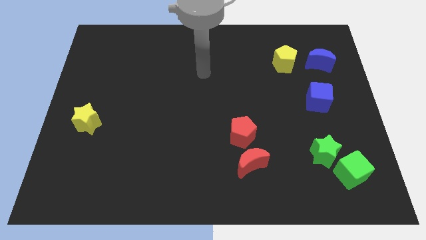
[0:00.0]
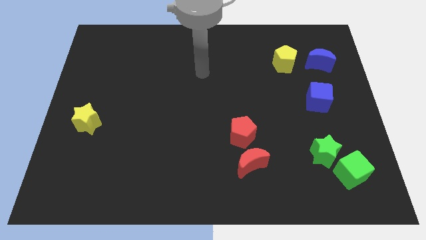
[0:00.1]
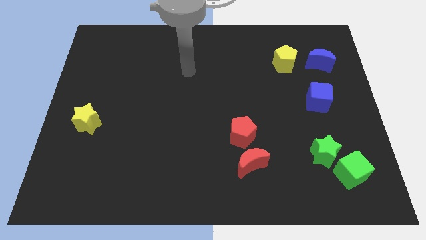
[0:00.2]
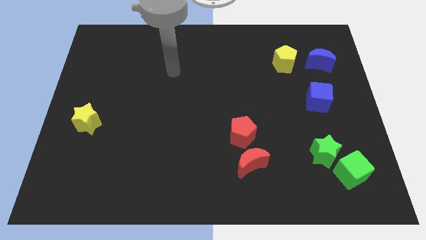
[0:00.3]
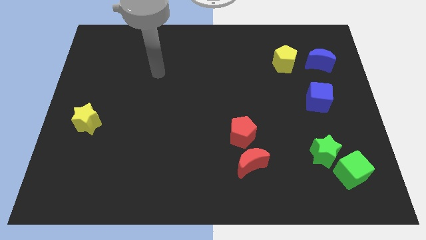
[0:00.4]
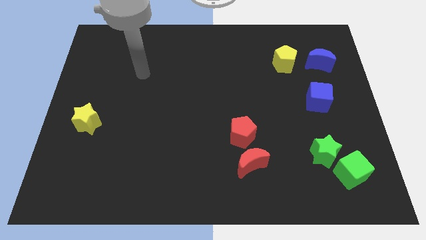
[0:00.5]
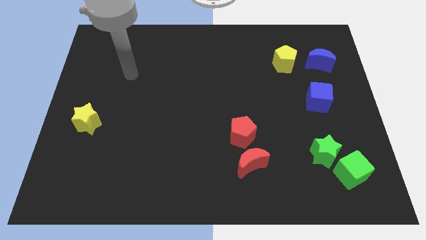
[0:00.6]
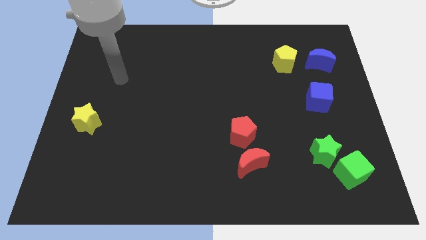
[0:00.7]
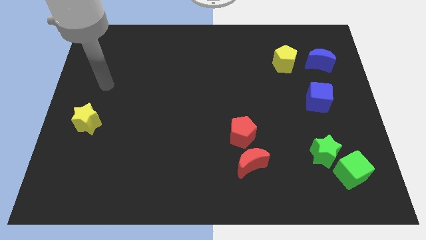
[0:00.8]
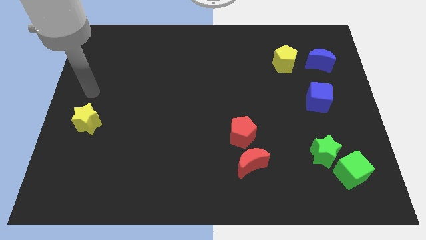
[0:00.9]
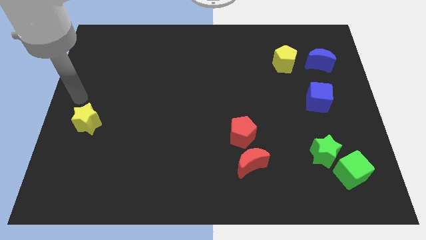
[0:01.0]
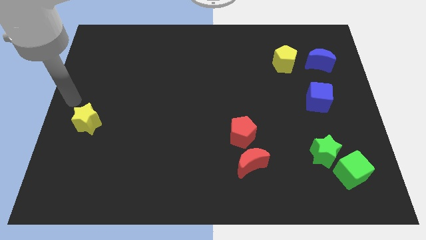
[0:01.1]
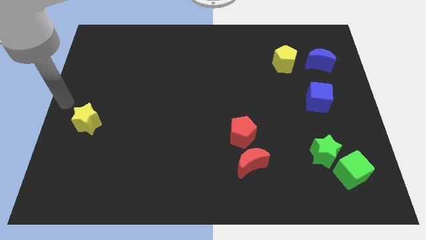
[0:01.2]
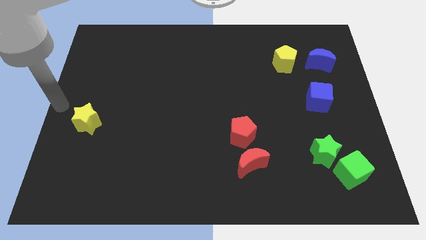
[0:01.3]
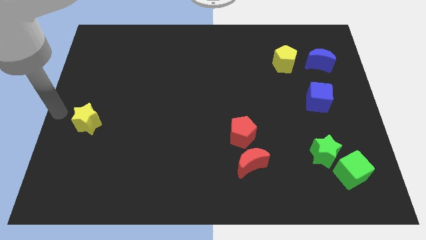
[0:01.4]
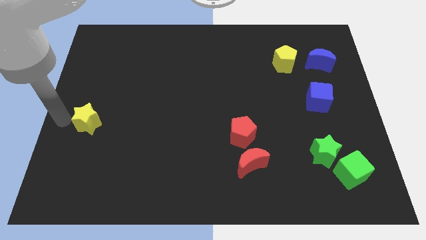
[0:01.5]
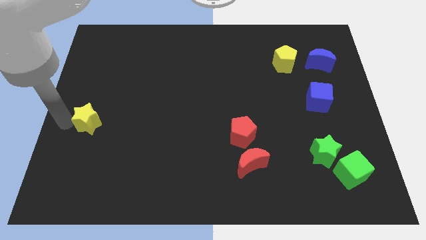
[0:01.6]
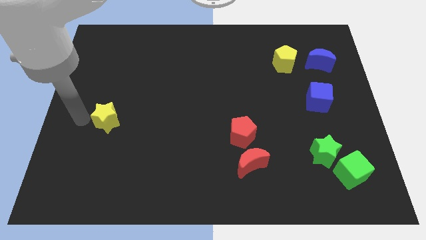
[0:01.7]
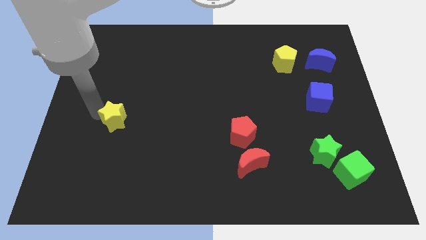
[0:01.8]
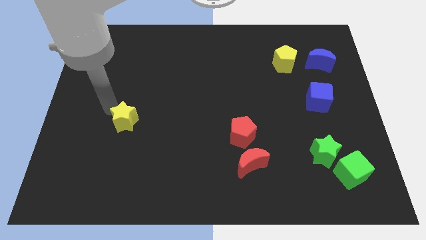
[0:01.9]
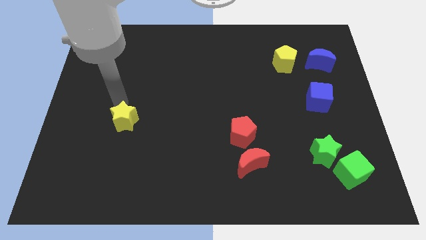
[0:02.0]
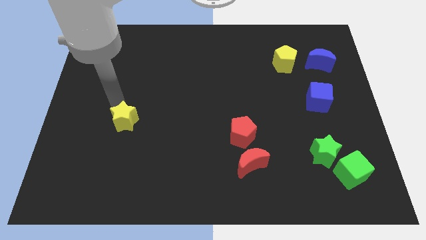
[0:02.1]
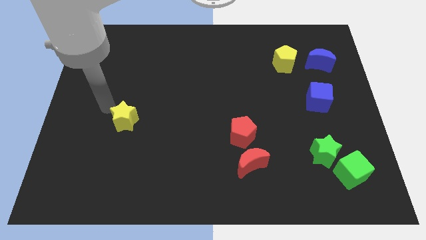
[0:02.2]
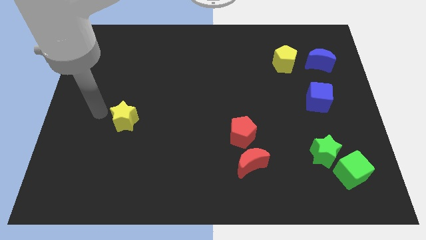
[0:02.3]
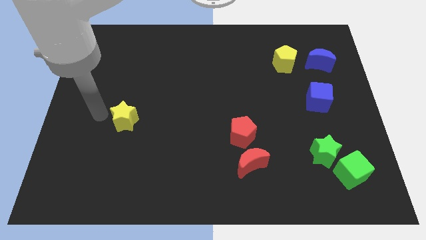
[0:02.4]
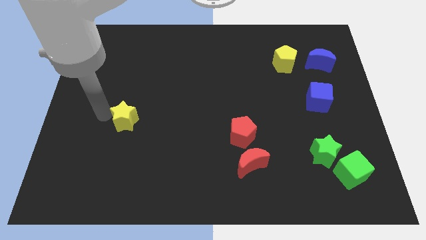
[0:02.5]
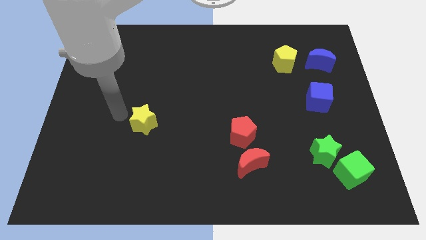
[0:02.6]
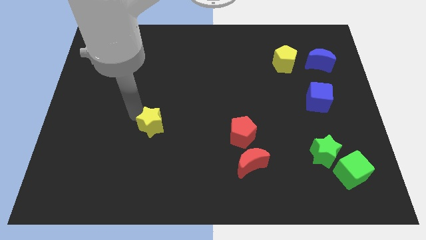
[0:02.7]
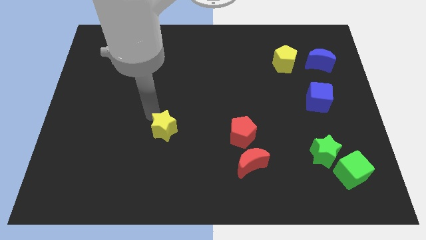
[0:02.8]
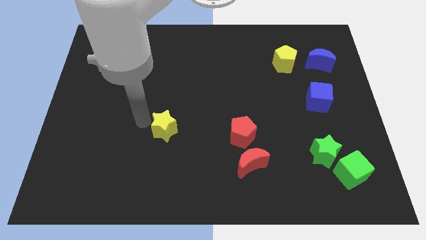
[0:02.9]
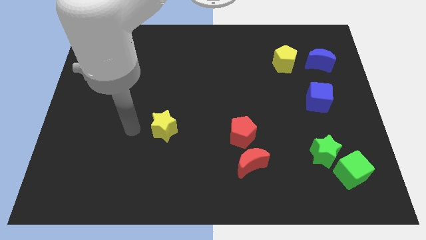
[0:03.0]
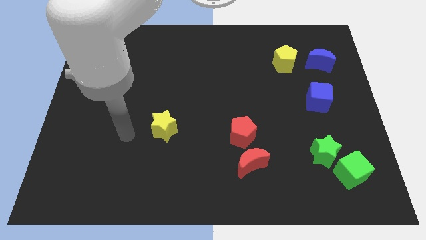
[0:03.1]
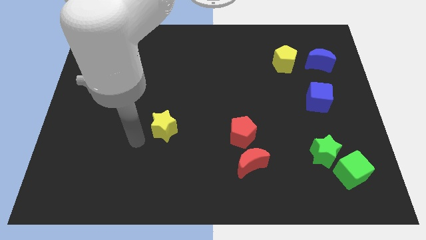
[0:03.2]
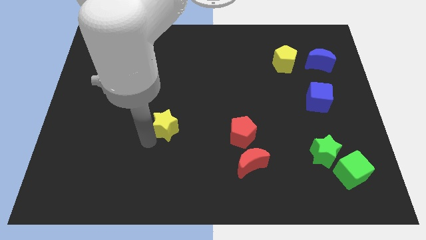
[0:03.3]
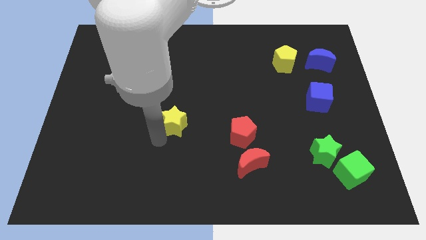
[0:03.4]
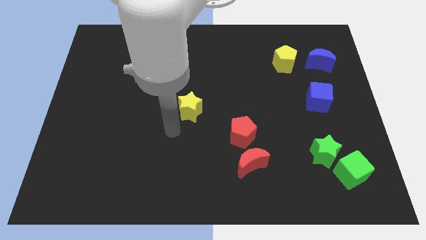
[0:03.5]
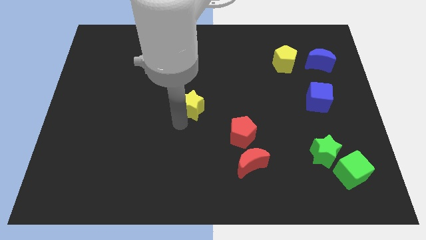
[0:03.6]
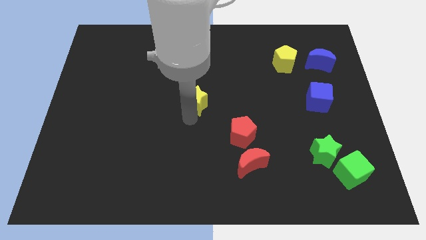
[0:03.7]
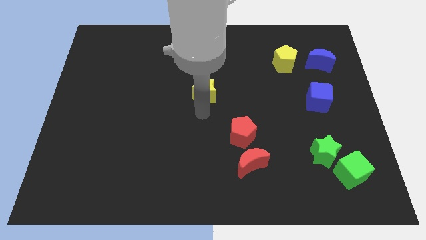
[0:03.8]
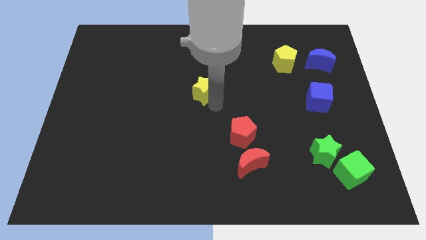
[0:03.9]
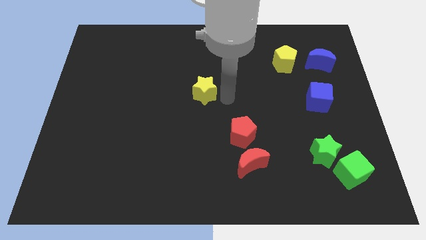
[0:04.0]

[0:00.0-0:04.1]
slide the yellow star at the center of the board

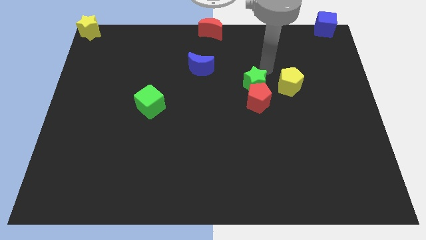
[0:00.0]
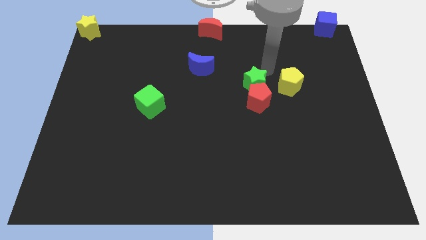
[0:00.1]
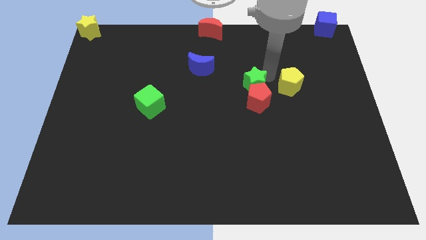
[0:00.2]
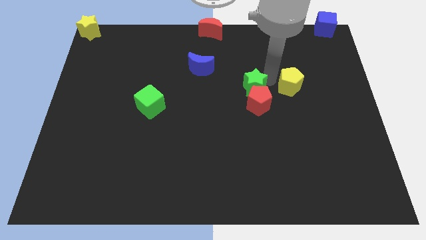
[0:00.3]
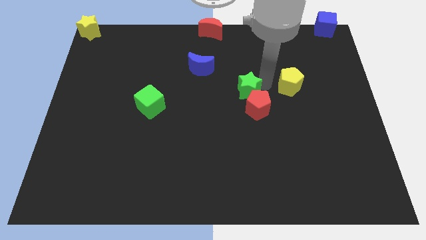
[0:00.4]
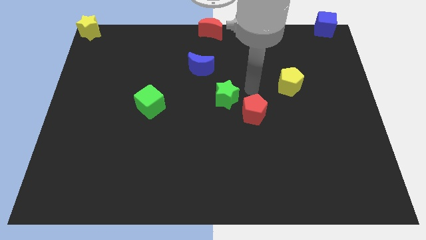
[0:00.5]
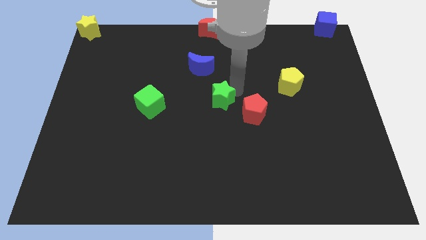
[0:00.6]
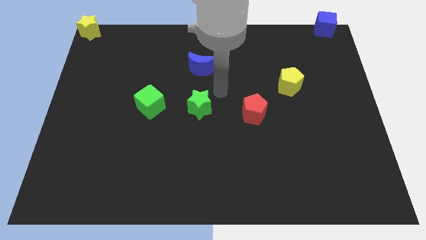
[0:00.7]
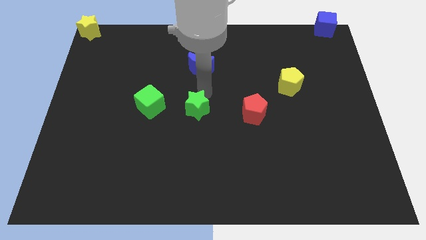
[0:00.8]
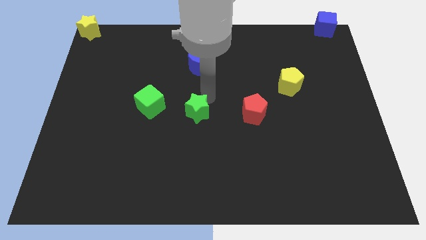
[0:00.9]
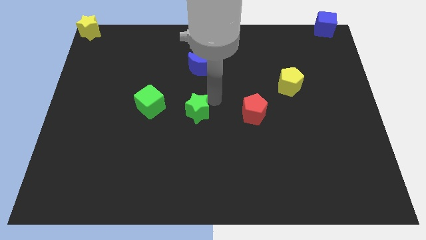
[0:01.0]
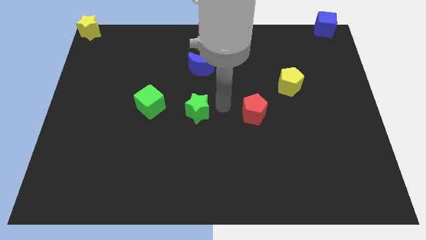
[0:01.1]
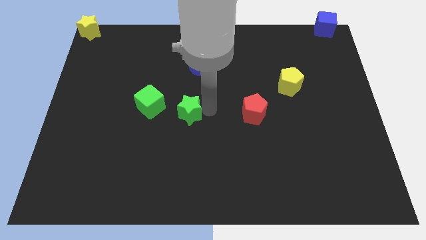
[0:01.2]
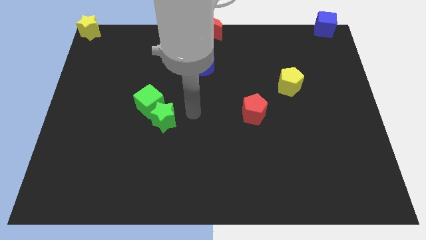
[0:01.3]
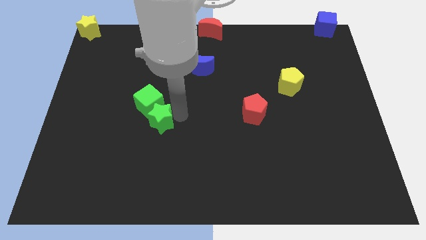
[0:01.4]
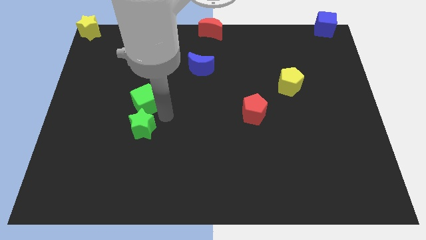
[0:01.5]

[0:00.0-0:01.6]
push the green star into the green cube

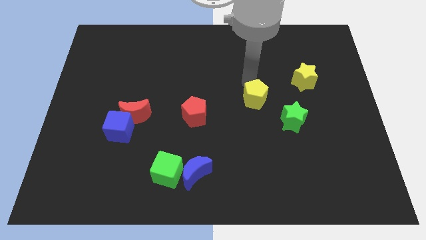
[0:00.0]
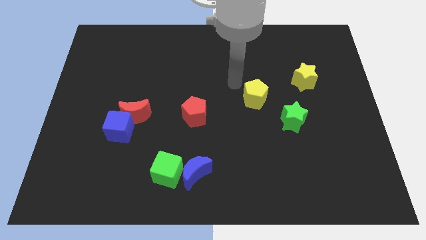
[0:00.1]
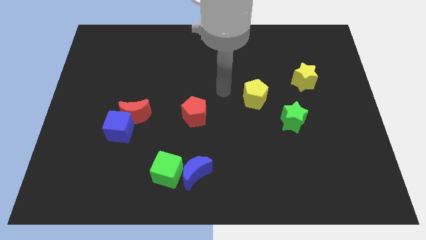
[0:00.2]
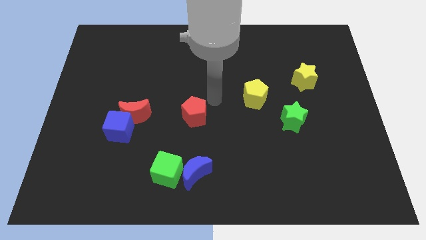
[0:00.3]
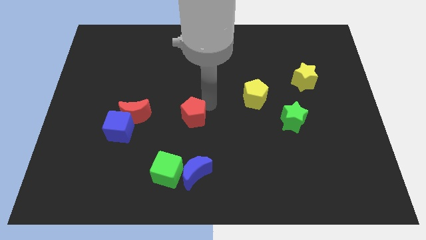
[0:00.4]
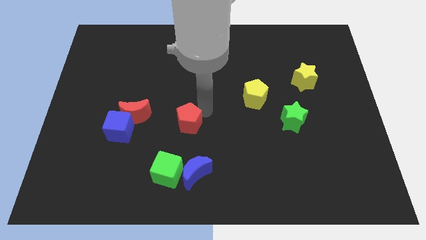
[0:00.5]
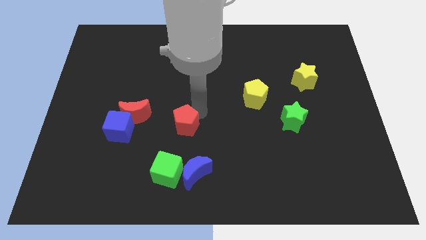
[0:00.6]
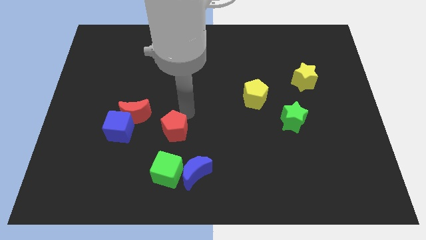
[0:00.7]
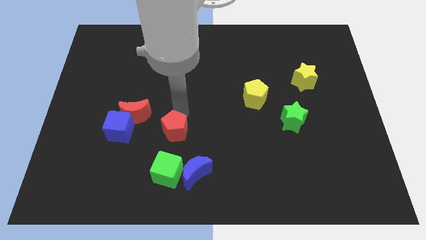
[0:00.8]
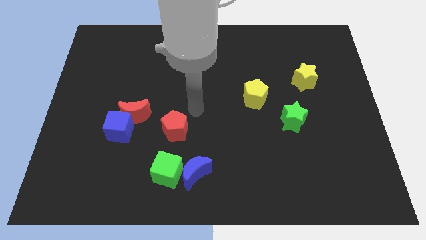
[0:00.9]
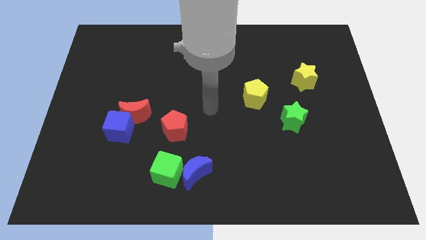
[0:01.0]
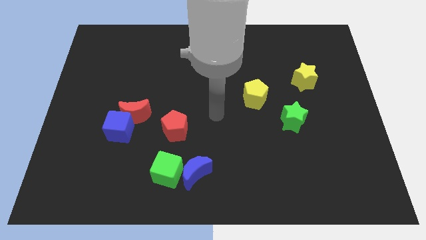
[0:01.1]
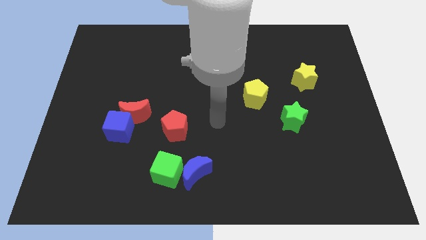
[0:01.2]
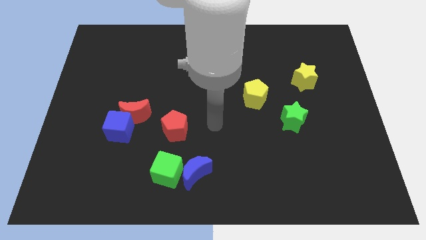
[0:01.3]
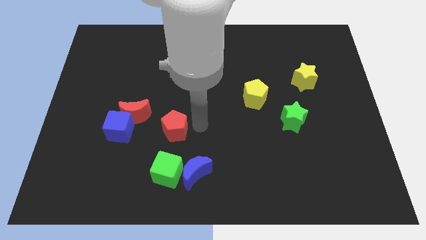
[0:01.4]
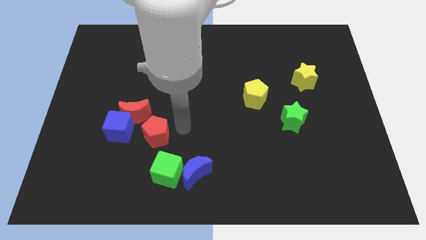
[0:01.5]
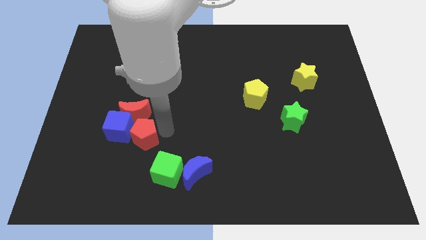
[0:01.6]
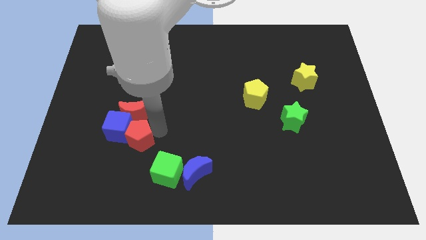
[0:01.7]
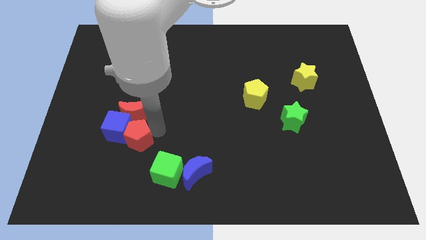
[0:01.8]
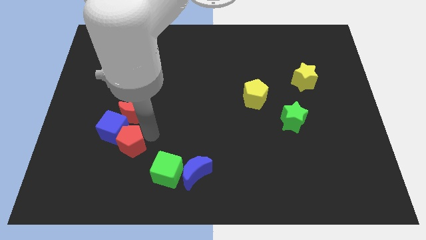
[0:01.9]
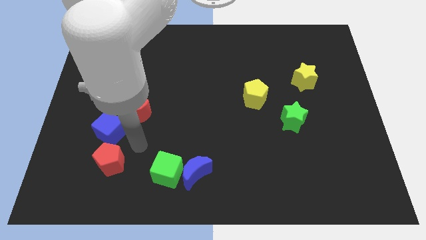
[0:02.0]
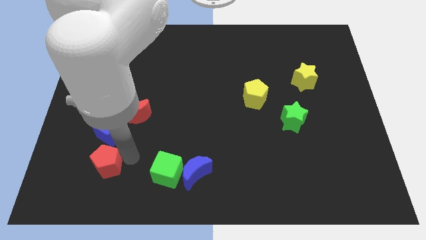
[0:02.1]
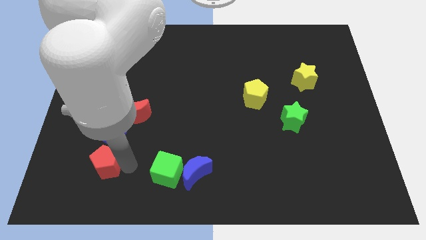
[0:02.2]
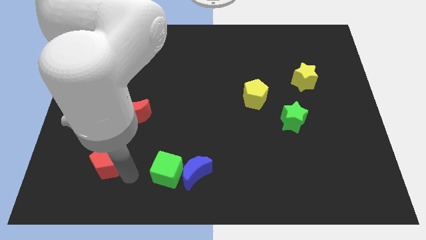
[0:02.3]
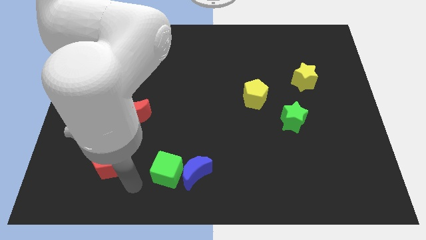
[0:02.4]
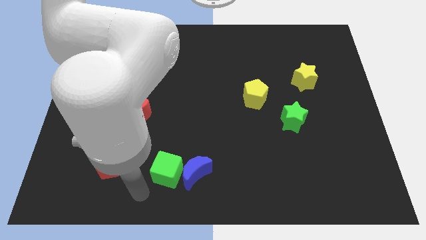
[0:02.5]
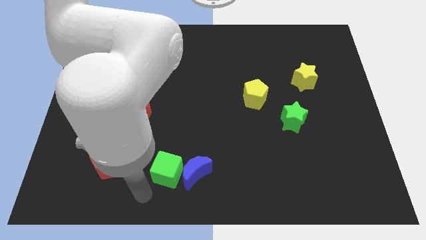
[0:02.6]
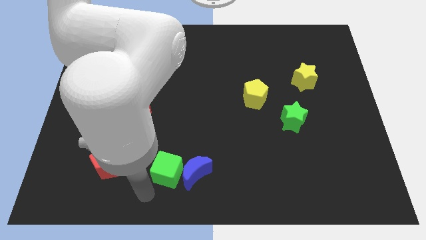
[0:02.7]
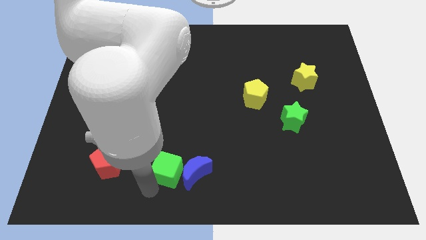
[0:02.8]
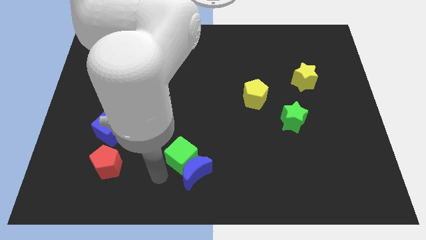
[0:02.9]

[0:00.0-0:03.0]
push the red pentagon to the bottom of the blue cube

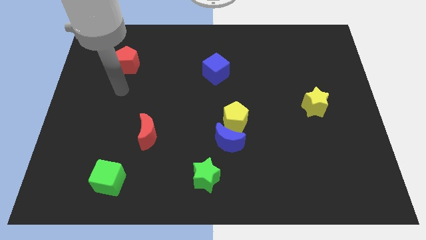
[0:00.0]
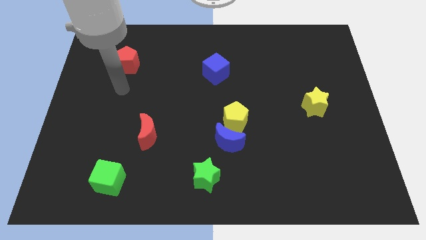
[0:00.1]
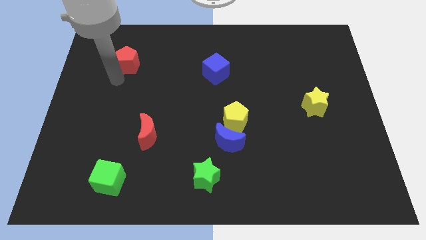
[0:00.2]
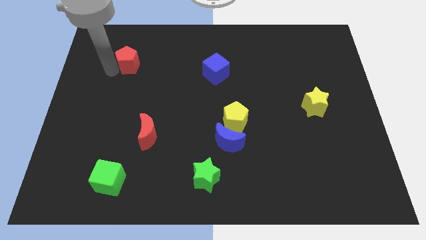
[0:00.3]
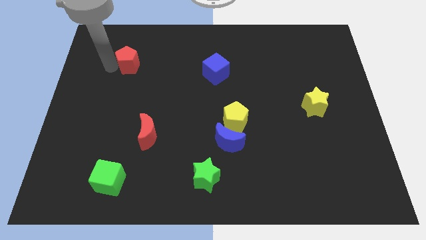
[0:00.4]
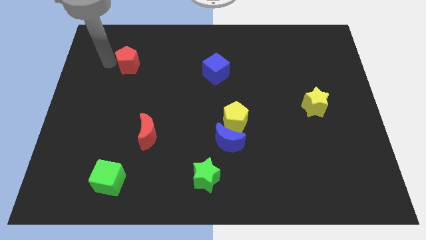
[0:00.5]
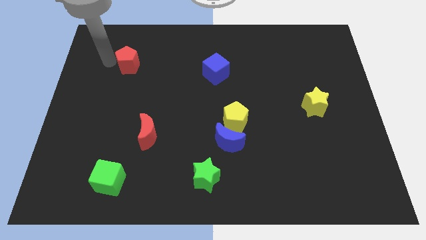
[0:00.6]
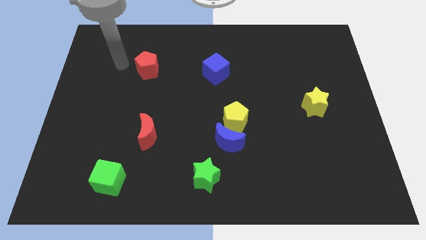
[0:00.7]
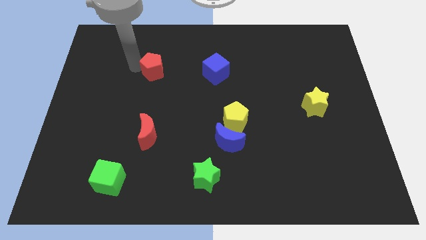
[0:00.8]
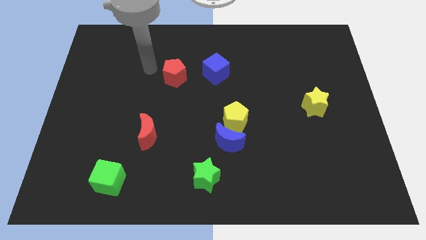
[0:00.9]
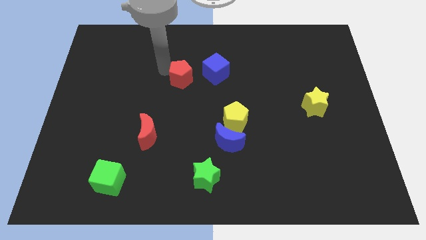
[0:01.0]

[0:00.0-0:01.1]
move red pentagon towards blue cube
